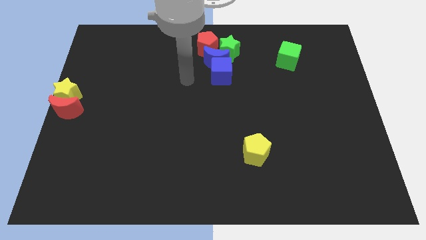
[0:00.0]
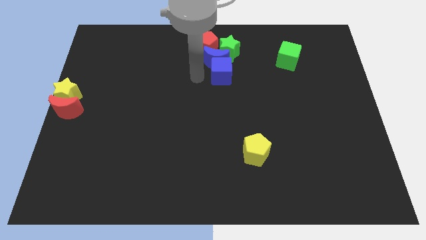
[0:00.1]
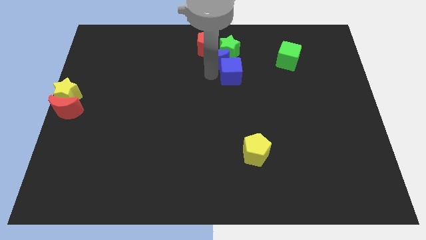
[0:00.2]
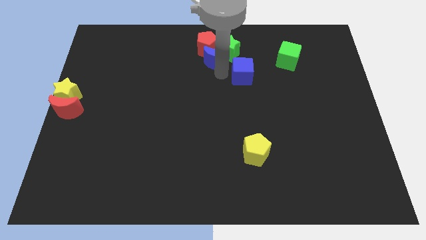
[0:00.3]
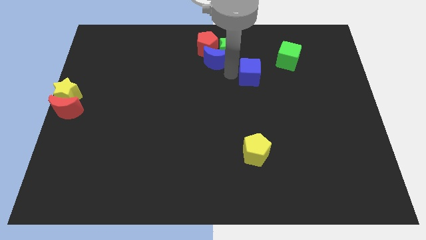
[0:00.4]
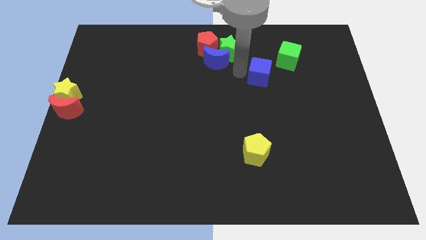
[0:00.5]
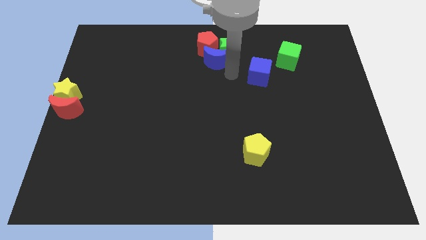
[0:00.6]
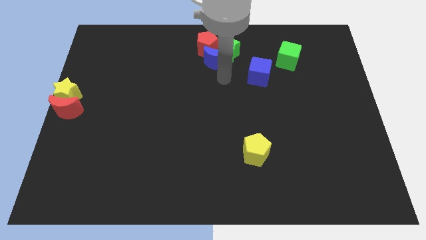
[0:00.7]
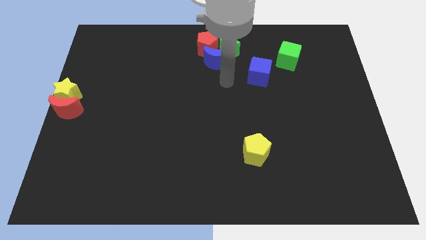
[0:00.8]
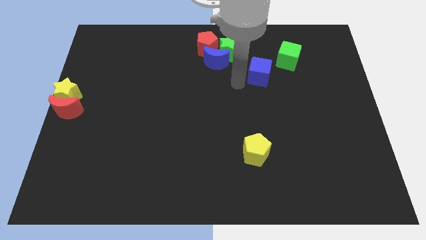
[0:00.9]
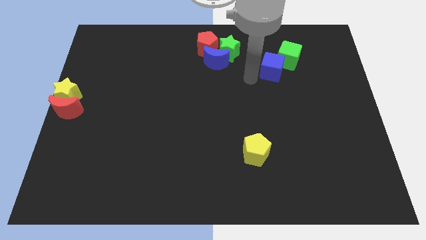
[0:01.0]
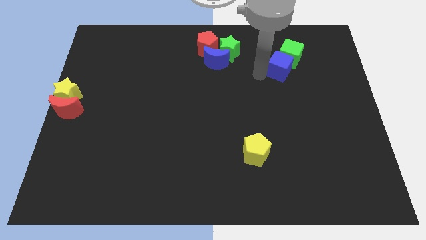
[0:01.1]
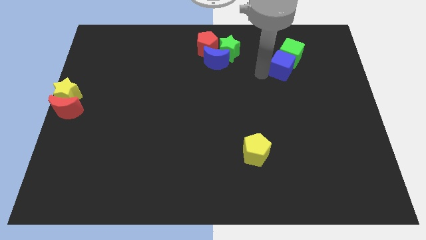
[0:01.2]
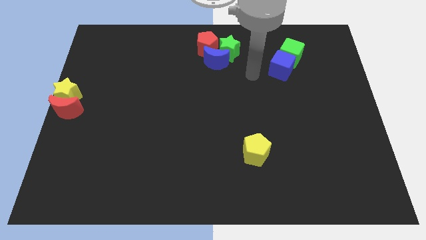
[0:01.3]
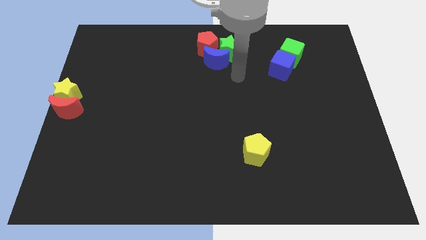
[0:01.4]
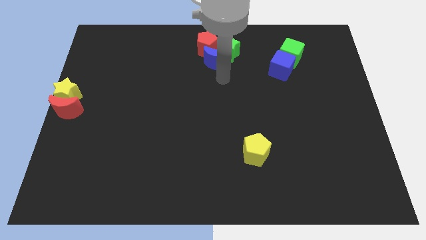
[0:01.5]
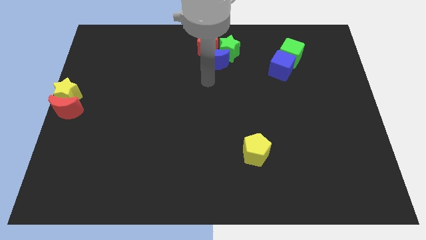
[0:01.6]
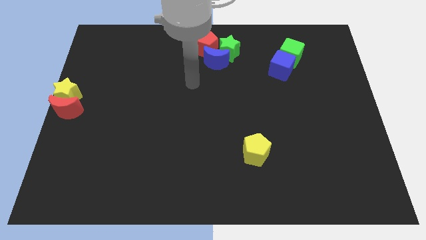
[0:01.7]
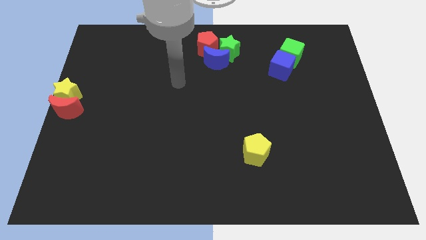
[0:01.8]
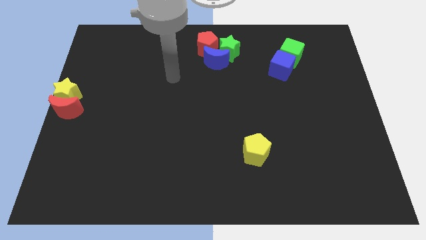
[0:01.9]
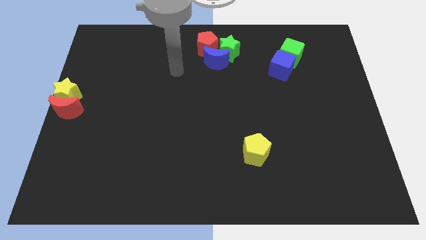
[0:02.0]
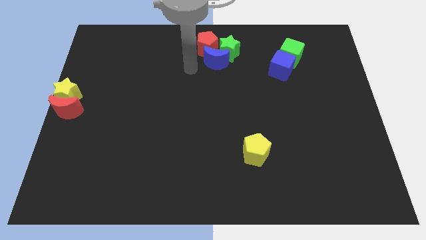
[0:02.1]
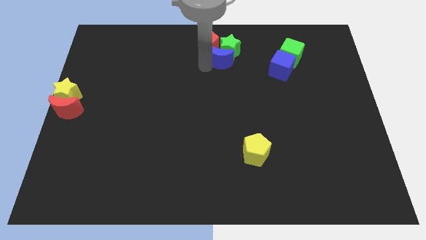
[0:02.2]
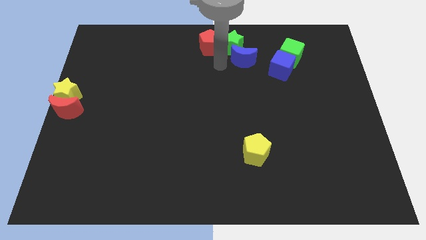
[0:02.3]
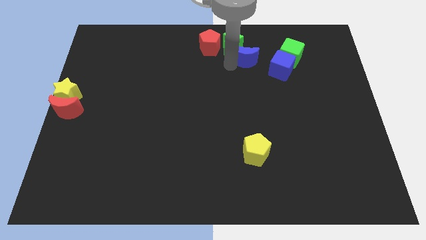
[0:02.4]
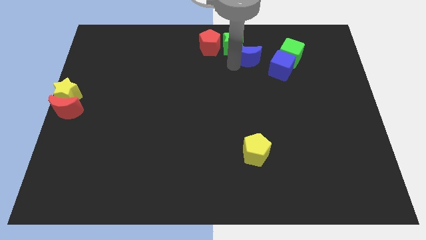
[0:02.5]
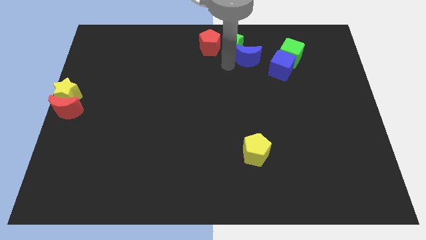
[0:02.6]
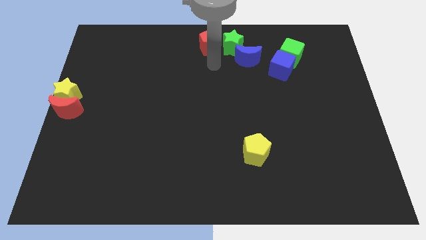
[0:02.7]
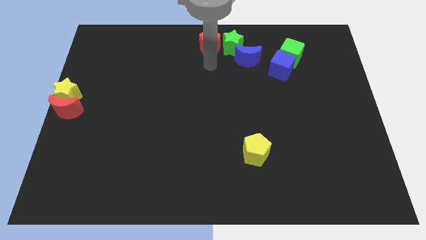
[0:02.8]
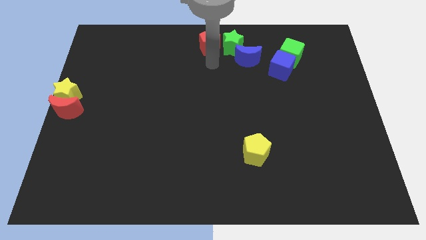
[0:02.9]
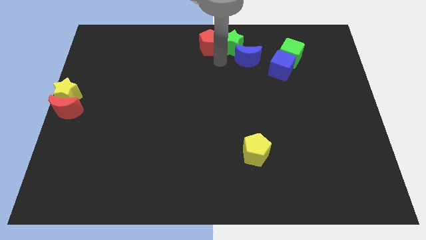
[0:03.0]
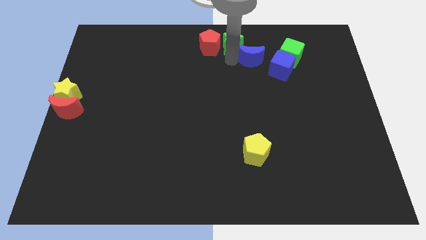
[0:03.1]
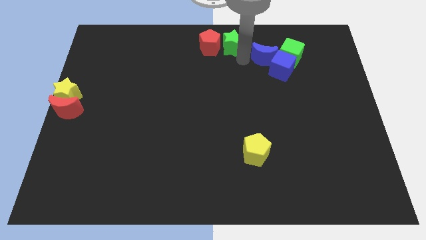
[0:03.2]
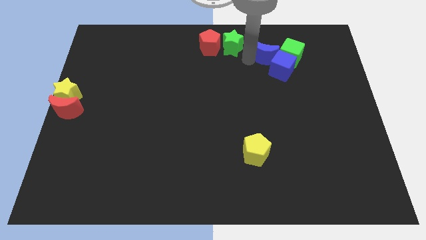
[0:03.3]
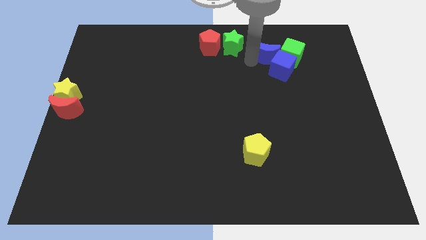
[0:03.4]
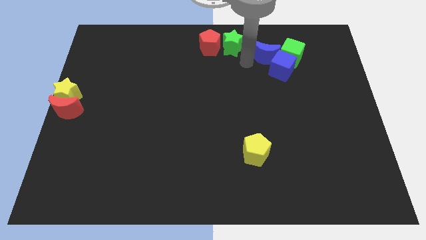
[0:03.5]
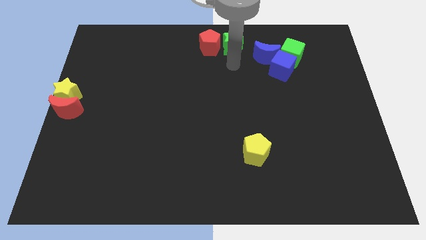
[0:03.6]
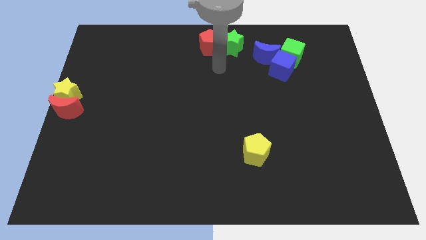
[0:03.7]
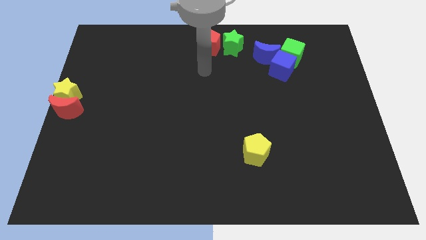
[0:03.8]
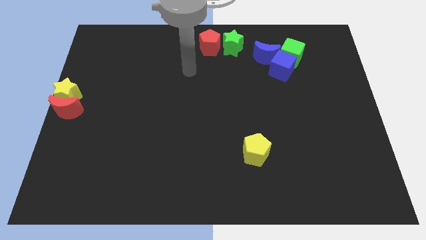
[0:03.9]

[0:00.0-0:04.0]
push the blue cube into the green cube

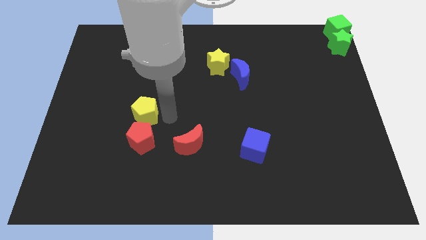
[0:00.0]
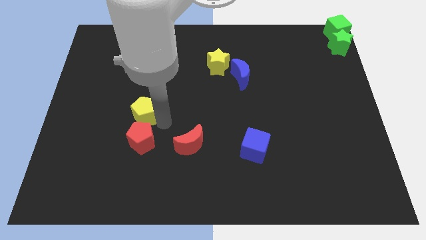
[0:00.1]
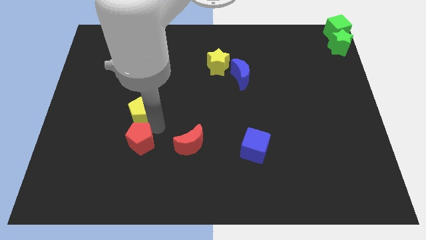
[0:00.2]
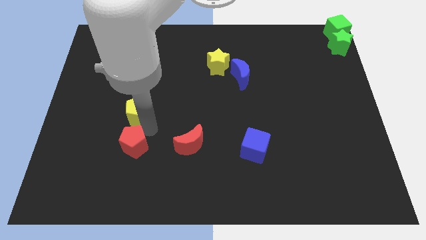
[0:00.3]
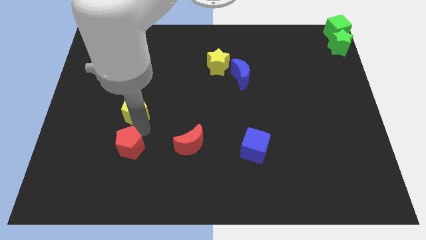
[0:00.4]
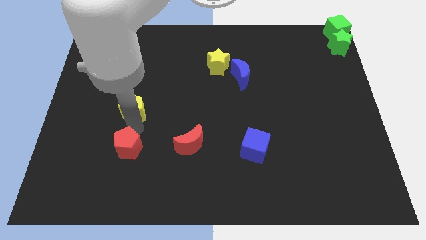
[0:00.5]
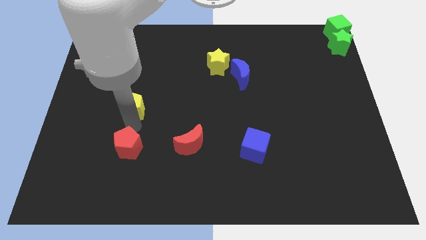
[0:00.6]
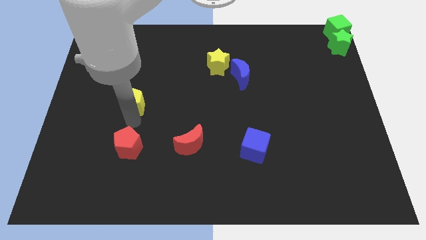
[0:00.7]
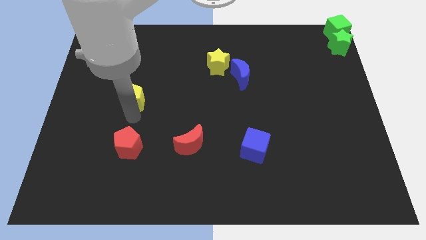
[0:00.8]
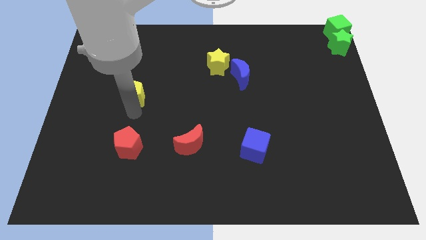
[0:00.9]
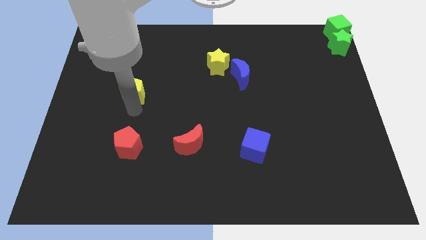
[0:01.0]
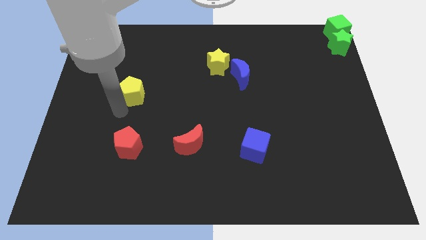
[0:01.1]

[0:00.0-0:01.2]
move yellow pentagon to the top of red pentagon

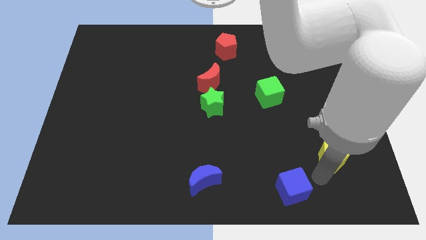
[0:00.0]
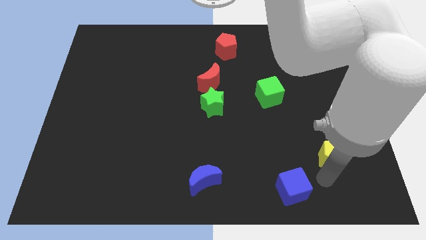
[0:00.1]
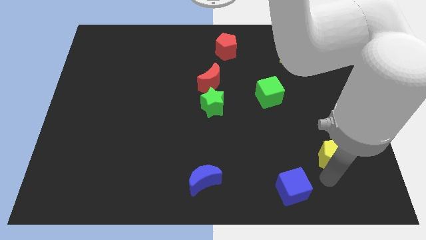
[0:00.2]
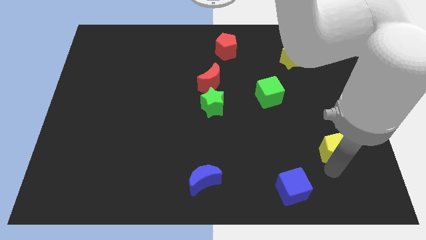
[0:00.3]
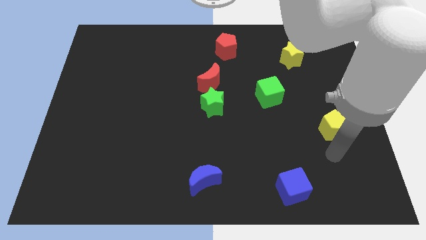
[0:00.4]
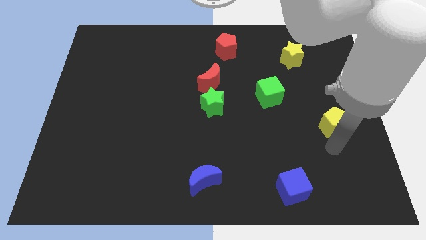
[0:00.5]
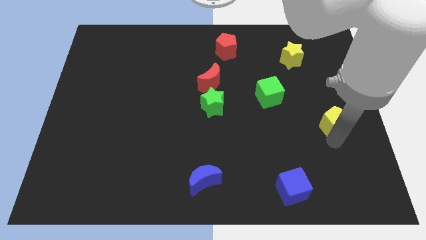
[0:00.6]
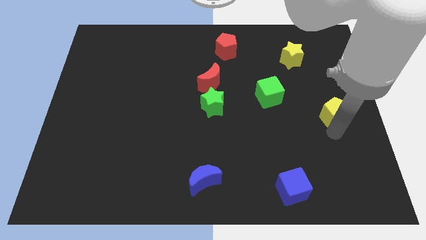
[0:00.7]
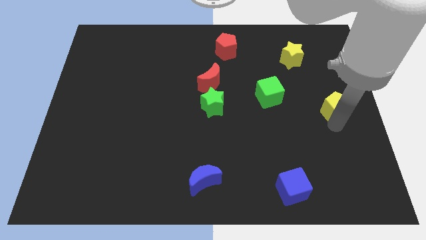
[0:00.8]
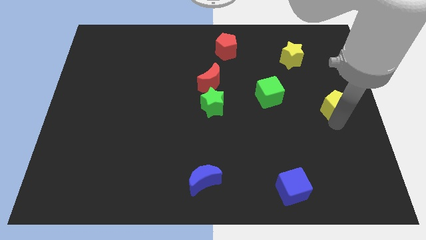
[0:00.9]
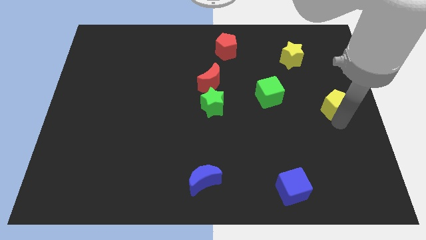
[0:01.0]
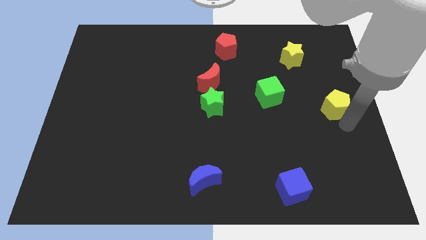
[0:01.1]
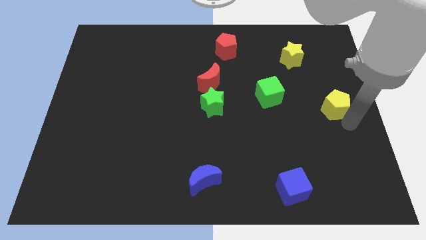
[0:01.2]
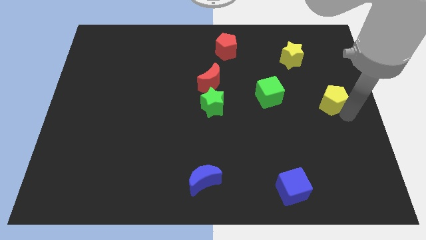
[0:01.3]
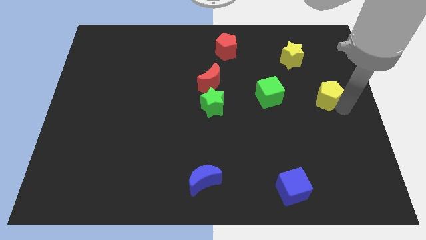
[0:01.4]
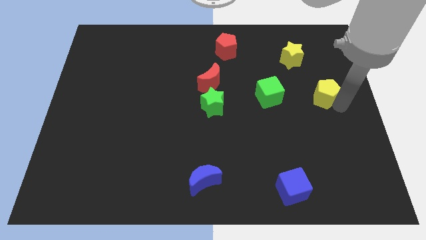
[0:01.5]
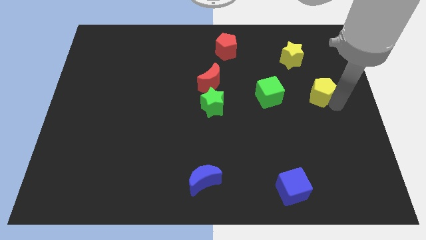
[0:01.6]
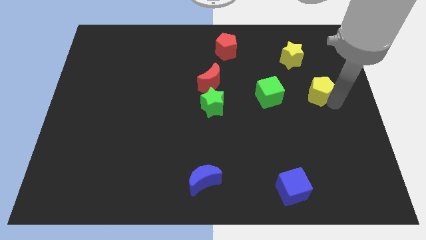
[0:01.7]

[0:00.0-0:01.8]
slide yellow pentagon towards the green cube

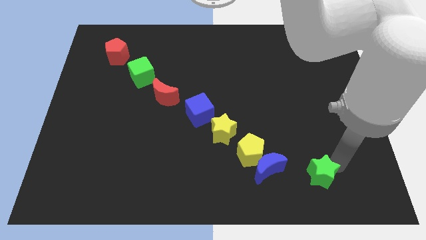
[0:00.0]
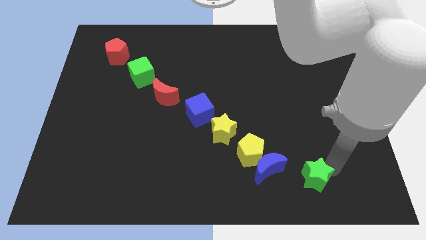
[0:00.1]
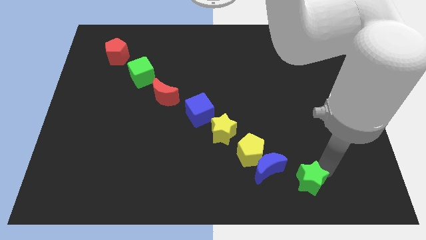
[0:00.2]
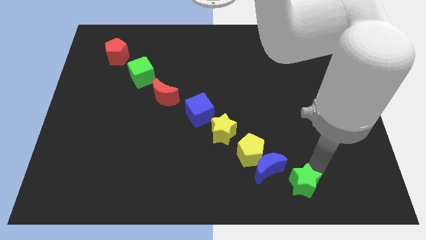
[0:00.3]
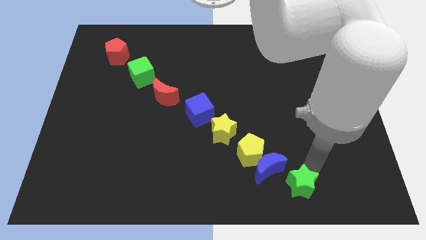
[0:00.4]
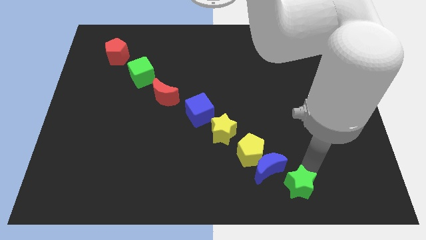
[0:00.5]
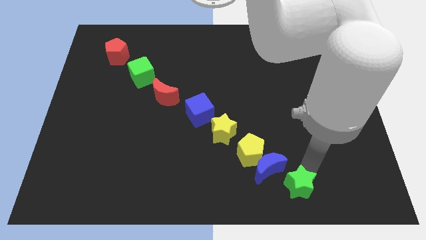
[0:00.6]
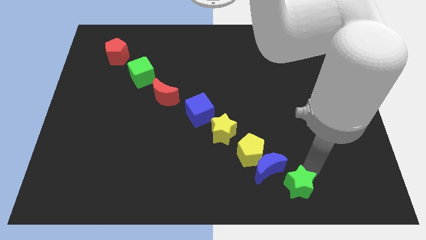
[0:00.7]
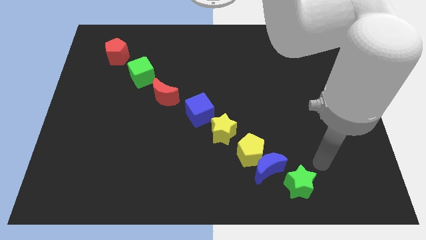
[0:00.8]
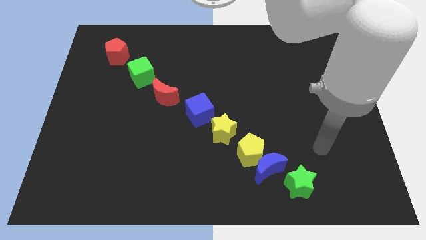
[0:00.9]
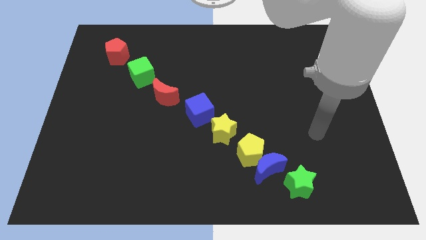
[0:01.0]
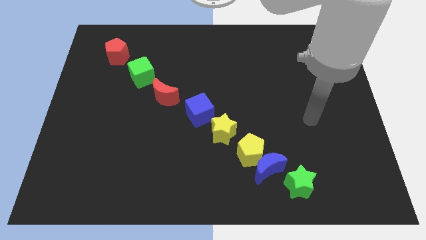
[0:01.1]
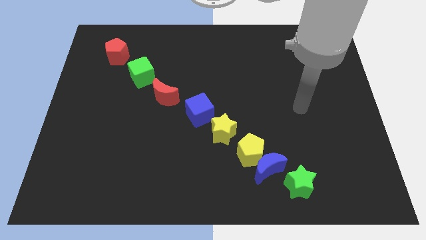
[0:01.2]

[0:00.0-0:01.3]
move the green star close to the blue moon

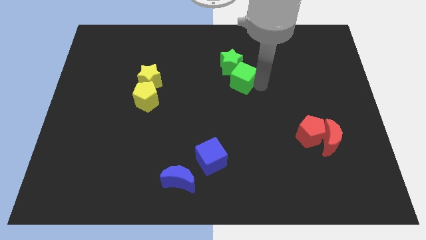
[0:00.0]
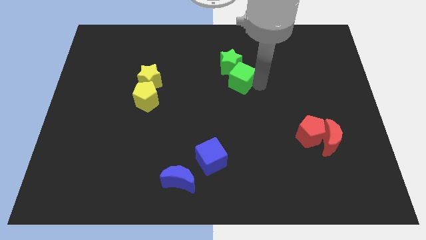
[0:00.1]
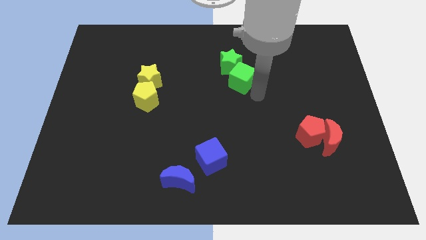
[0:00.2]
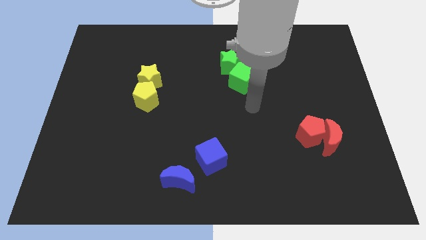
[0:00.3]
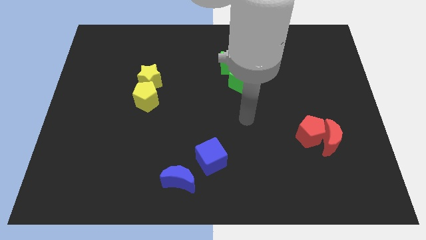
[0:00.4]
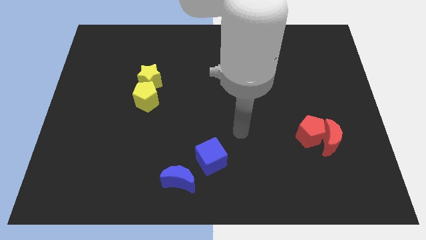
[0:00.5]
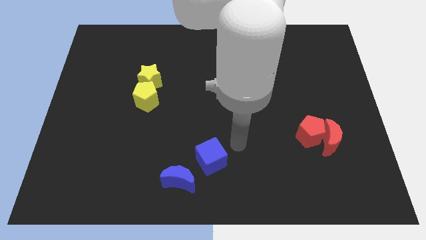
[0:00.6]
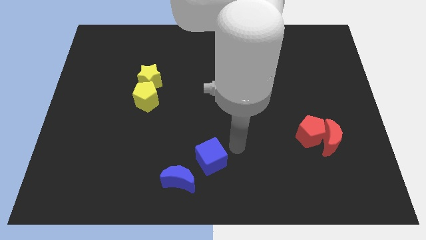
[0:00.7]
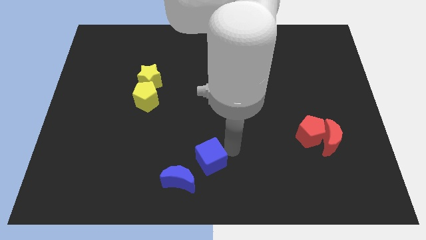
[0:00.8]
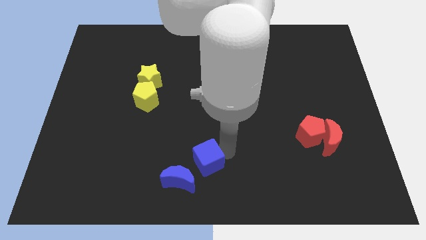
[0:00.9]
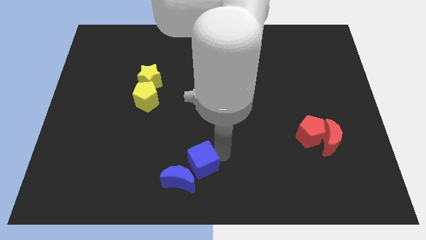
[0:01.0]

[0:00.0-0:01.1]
push the blue cube towards the blue crescent
